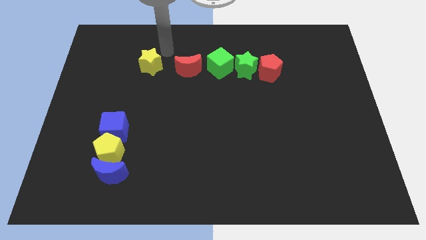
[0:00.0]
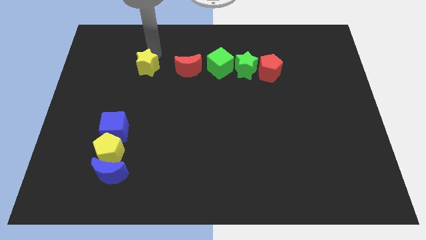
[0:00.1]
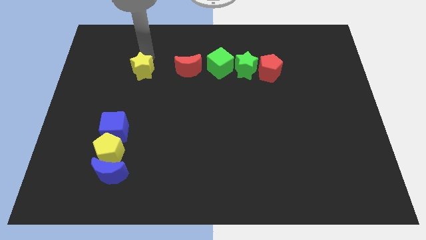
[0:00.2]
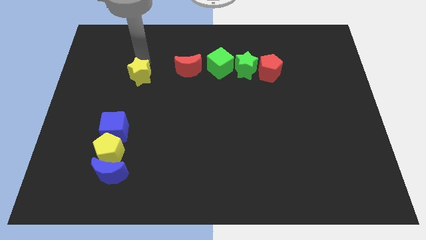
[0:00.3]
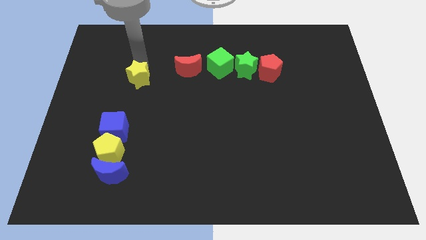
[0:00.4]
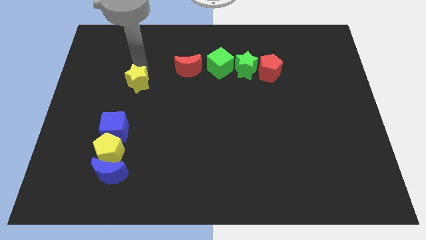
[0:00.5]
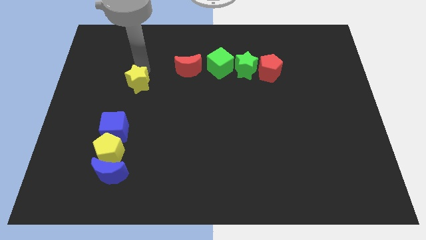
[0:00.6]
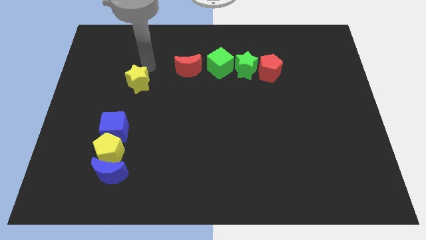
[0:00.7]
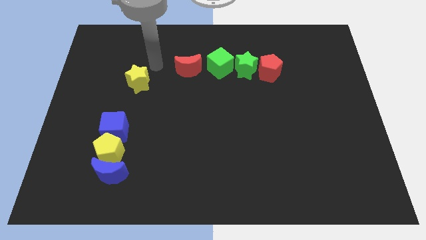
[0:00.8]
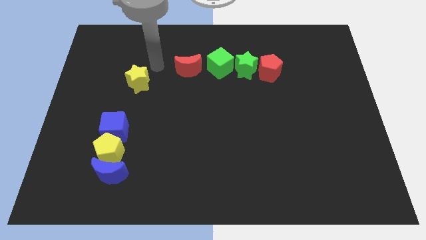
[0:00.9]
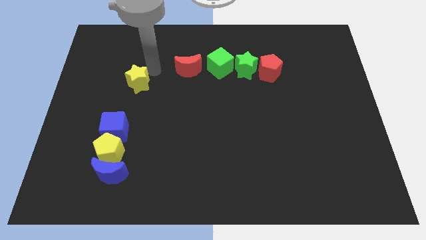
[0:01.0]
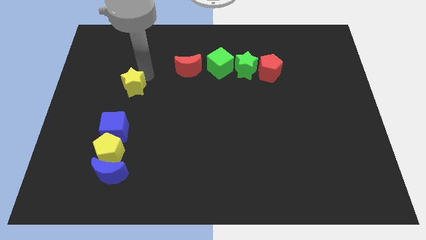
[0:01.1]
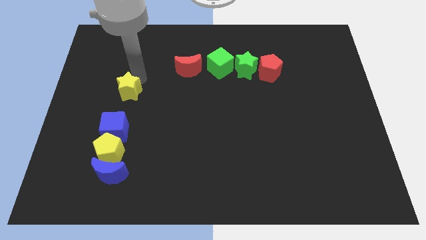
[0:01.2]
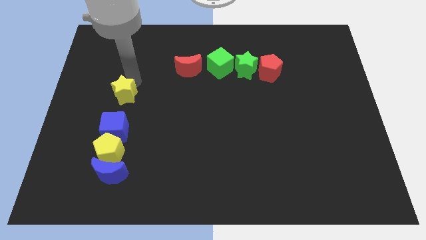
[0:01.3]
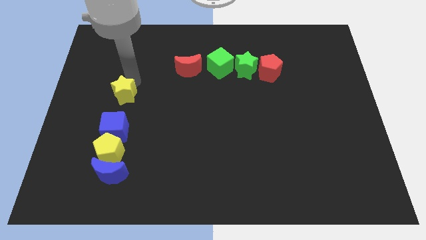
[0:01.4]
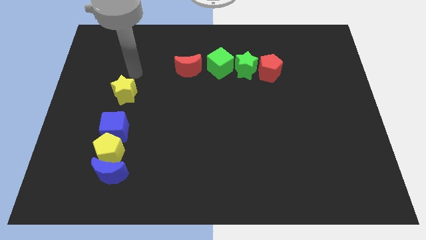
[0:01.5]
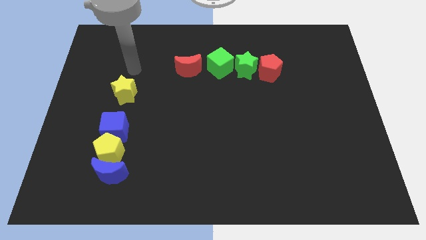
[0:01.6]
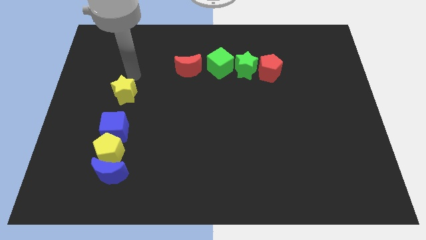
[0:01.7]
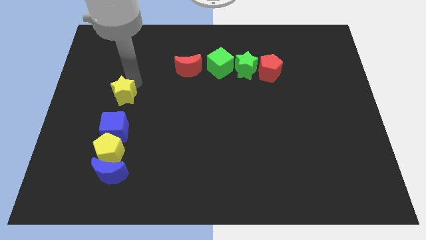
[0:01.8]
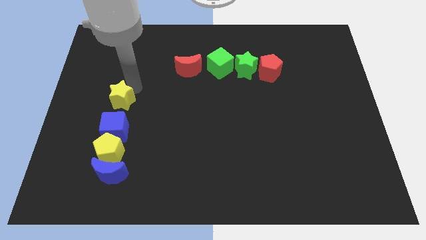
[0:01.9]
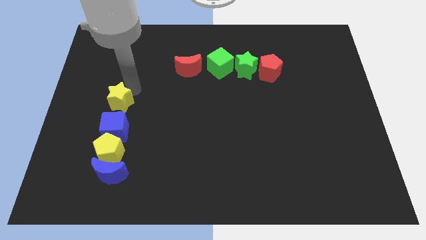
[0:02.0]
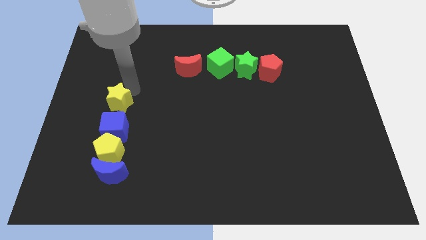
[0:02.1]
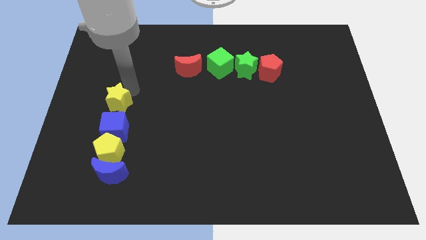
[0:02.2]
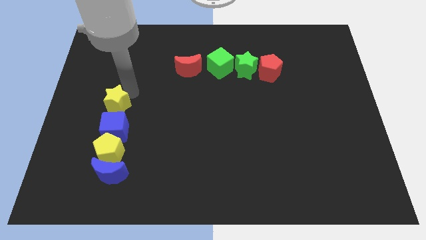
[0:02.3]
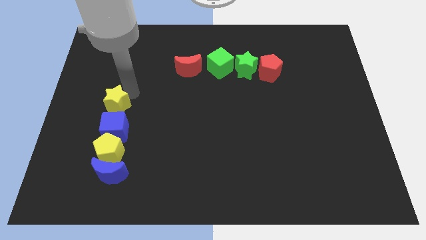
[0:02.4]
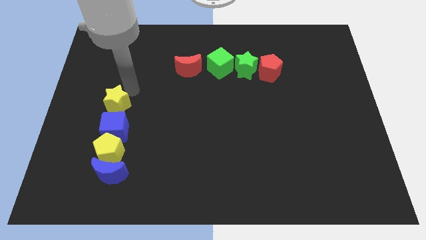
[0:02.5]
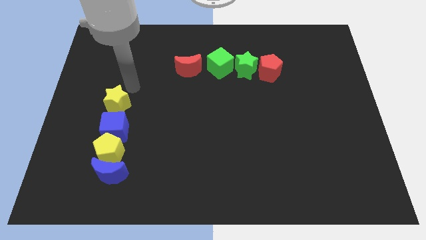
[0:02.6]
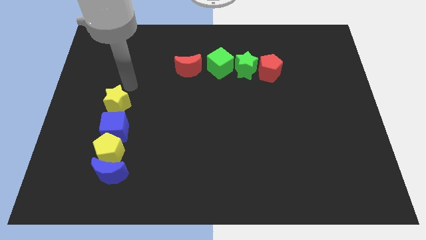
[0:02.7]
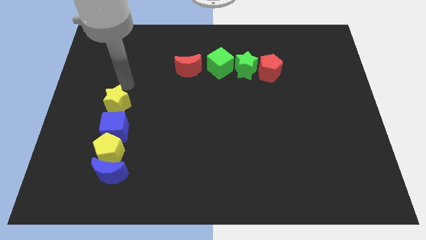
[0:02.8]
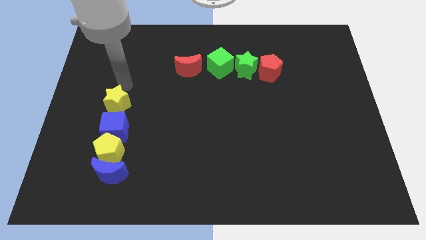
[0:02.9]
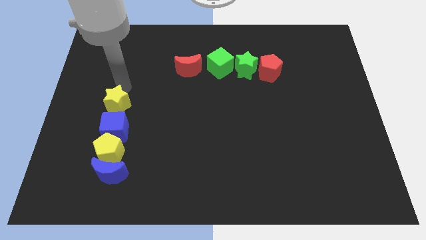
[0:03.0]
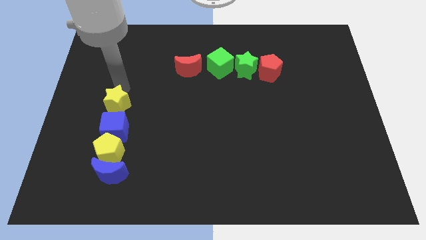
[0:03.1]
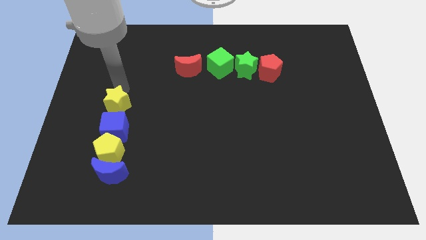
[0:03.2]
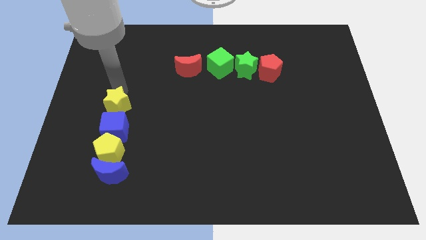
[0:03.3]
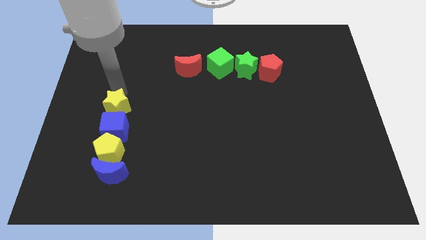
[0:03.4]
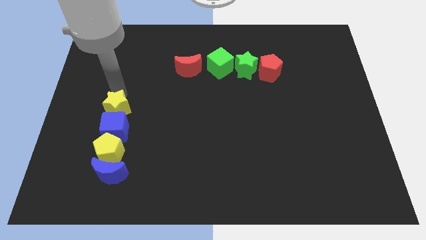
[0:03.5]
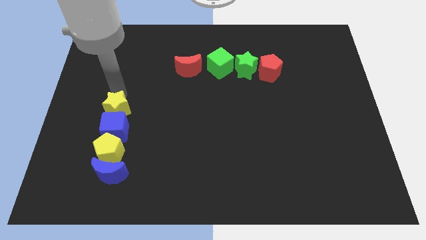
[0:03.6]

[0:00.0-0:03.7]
put the yellow star above the blue cube

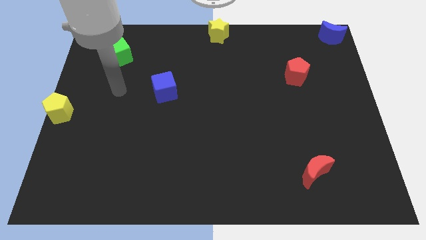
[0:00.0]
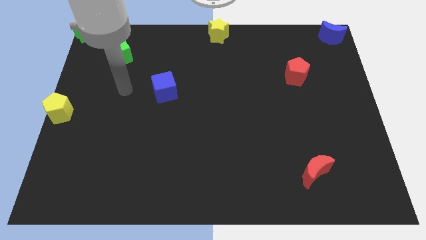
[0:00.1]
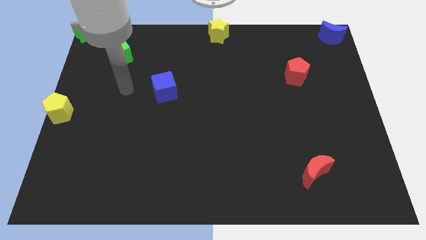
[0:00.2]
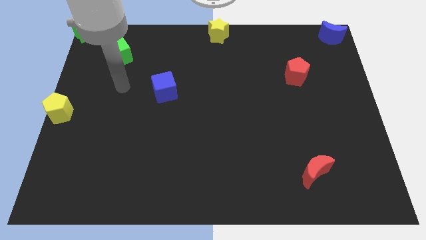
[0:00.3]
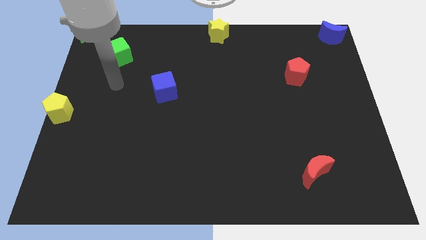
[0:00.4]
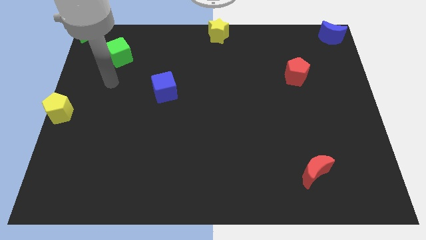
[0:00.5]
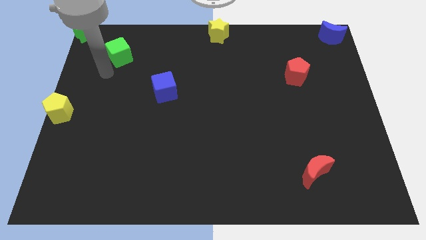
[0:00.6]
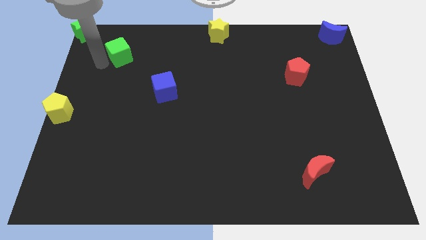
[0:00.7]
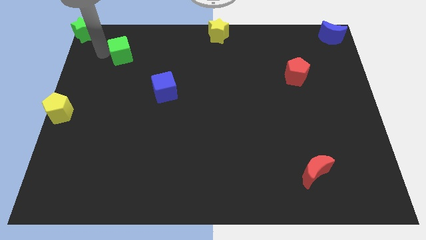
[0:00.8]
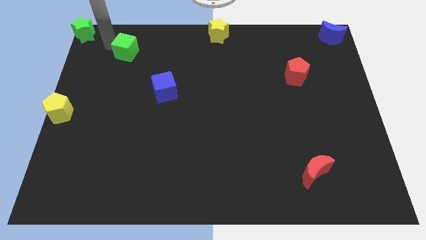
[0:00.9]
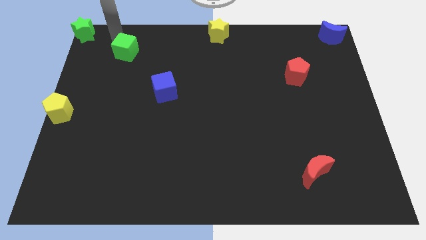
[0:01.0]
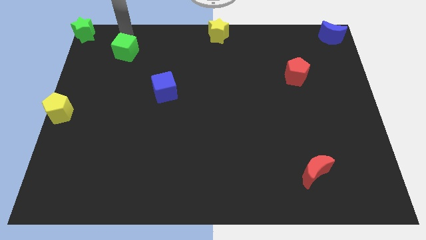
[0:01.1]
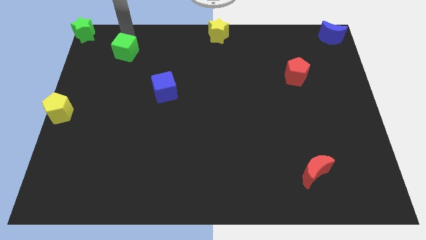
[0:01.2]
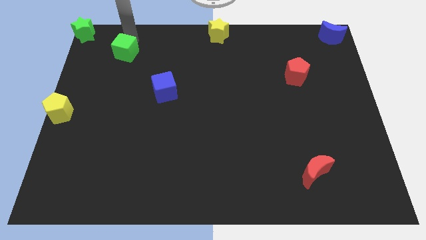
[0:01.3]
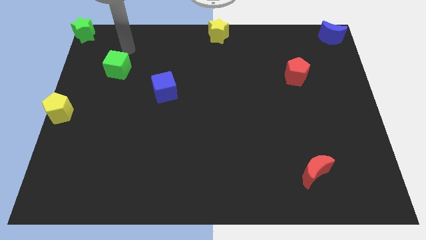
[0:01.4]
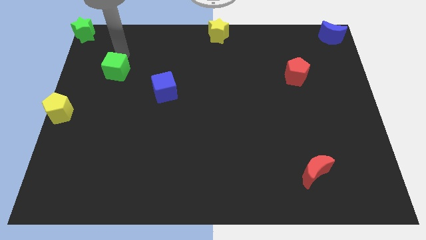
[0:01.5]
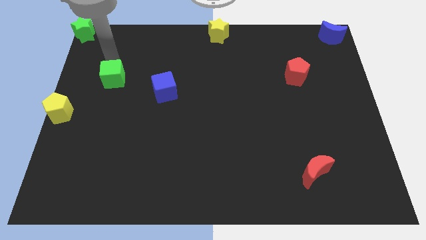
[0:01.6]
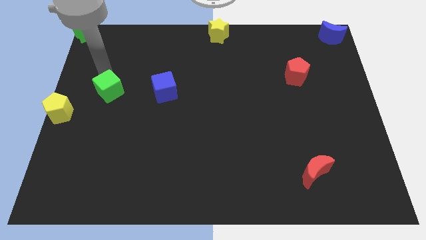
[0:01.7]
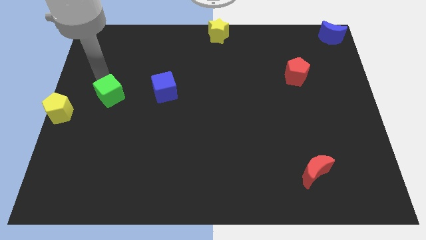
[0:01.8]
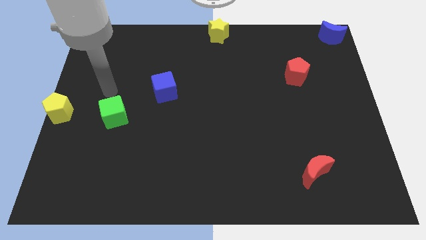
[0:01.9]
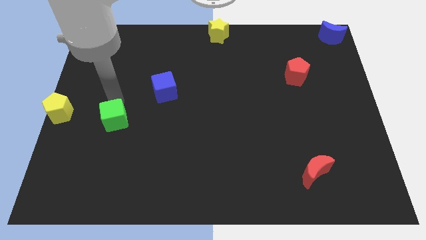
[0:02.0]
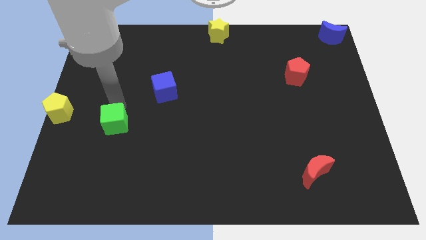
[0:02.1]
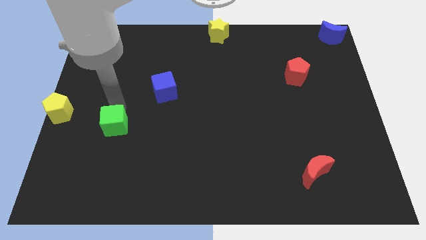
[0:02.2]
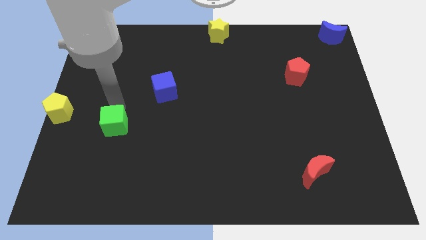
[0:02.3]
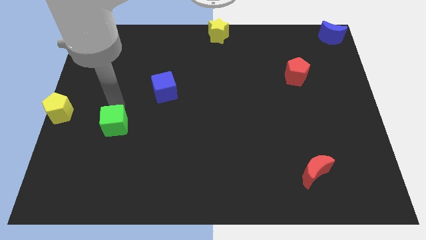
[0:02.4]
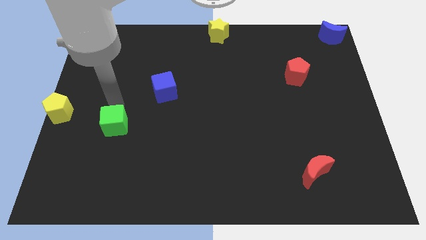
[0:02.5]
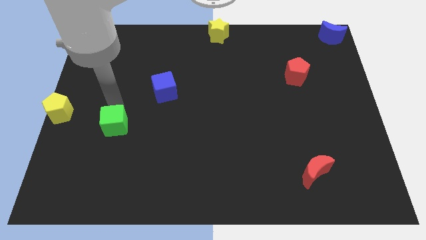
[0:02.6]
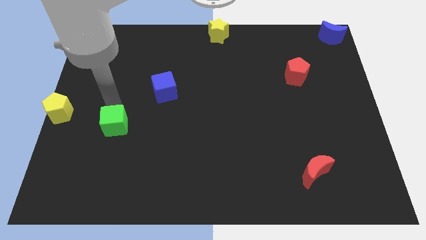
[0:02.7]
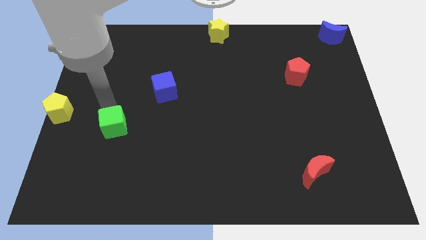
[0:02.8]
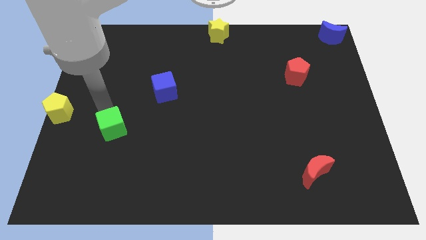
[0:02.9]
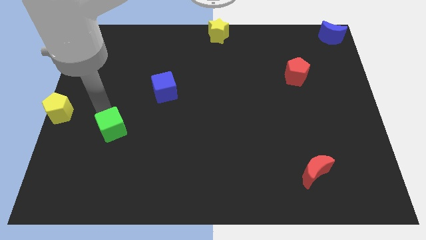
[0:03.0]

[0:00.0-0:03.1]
drag green cube to bottom right of yellow pentagon

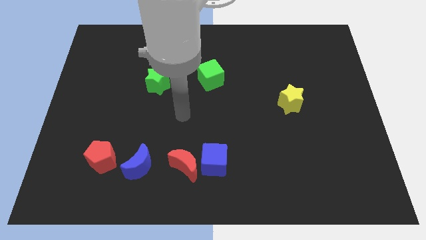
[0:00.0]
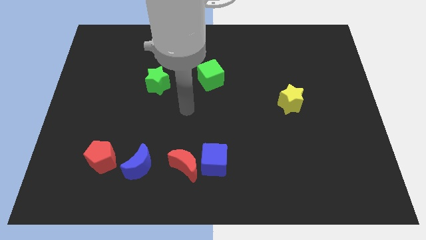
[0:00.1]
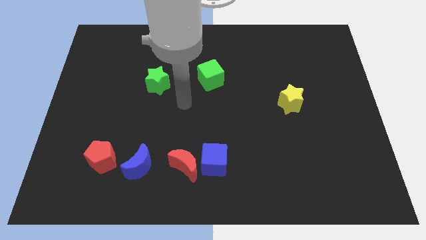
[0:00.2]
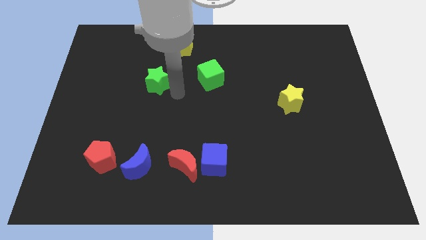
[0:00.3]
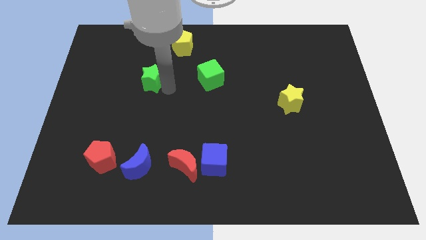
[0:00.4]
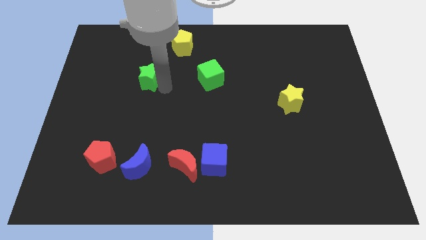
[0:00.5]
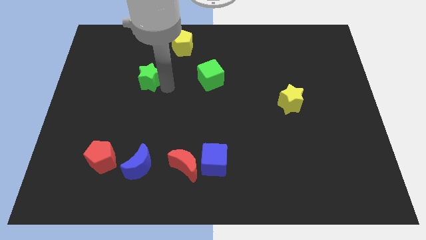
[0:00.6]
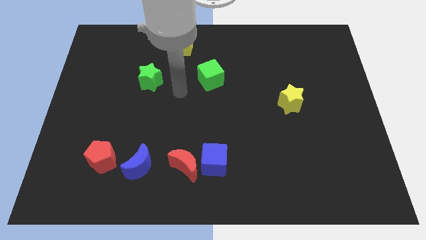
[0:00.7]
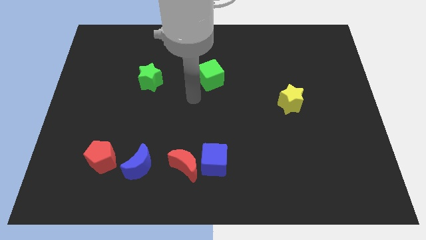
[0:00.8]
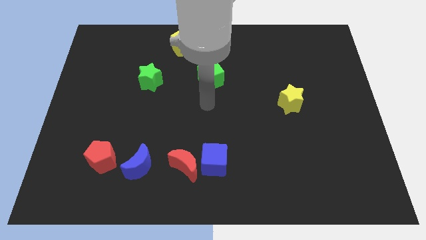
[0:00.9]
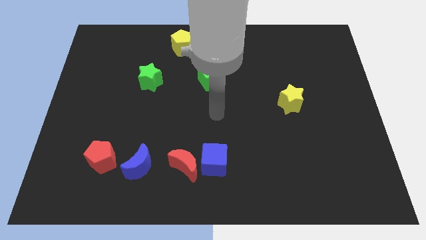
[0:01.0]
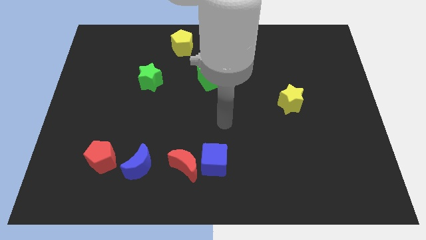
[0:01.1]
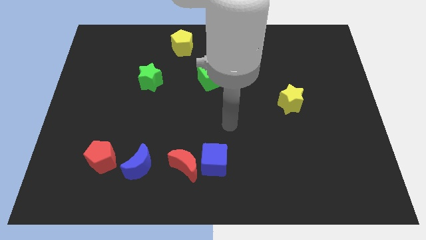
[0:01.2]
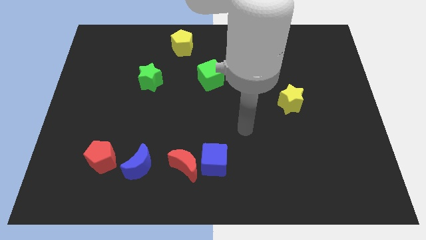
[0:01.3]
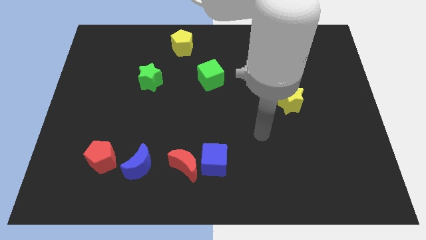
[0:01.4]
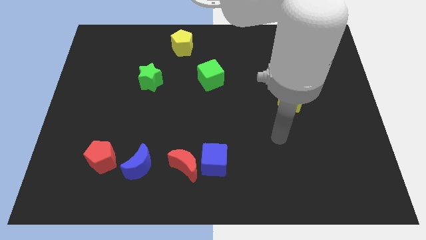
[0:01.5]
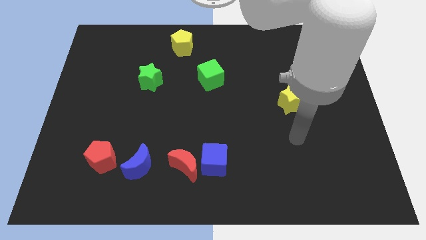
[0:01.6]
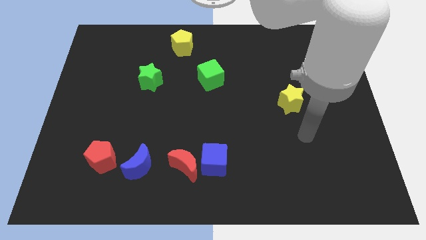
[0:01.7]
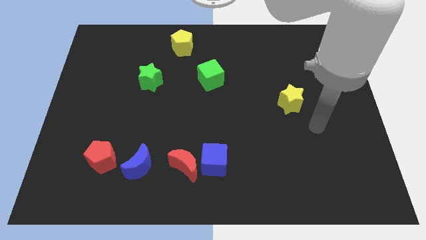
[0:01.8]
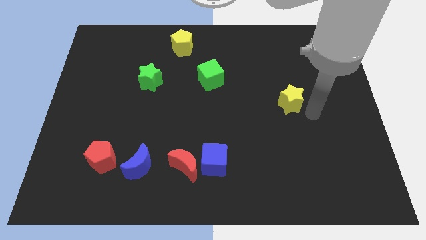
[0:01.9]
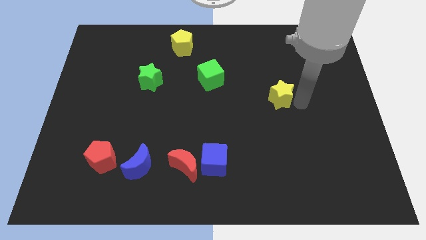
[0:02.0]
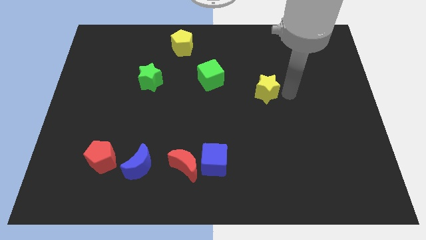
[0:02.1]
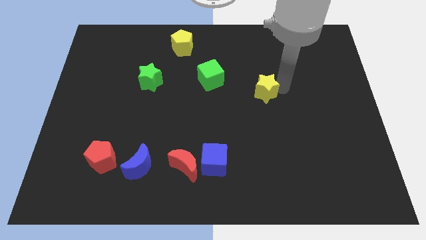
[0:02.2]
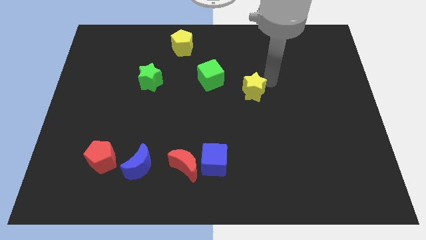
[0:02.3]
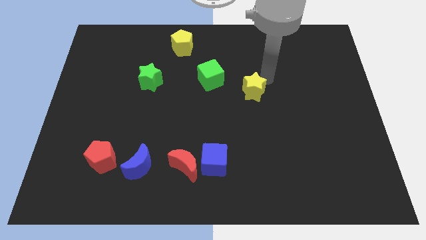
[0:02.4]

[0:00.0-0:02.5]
push the yellow star towards the green cube
